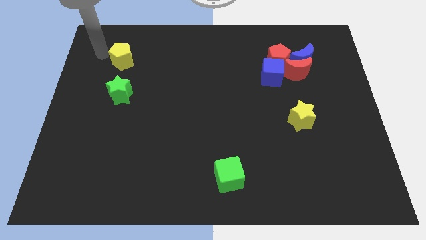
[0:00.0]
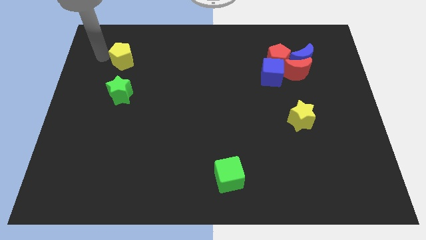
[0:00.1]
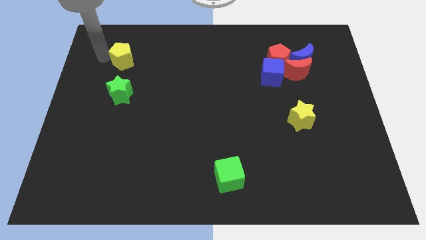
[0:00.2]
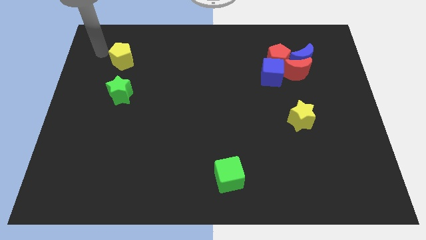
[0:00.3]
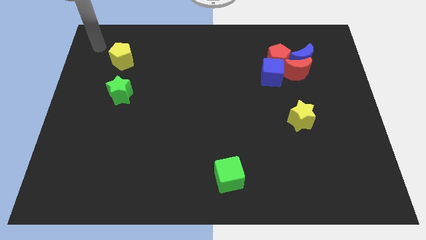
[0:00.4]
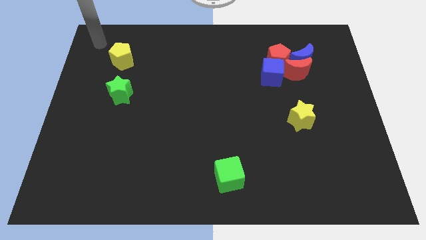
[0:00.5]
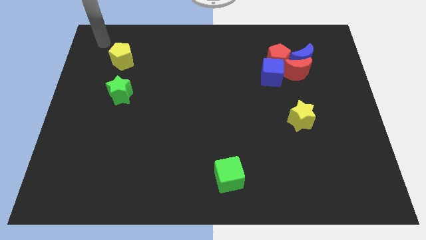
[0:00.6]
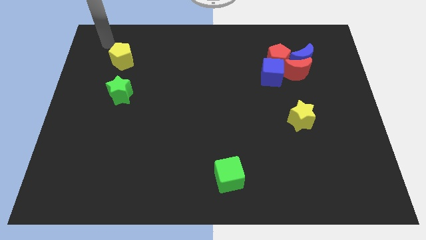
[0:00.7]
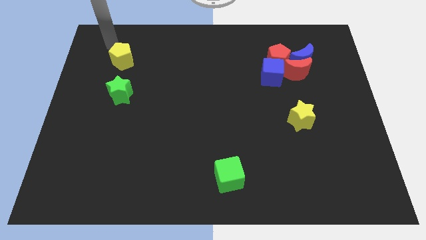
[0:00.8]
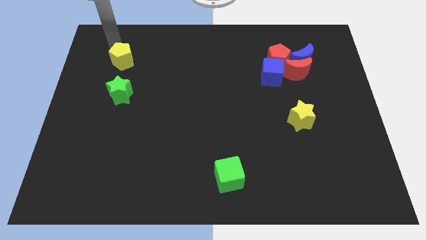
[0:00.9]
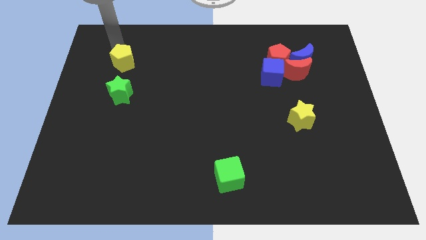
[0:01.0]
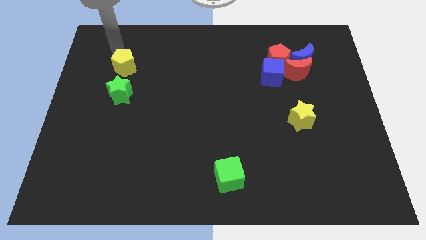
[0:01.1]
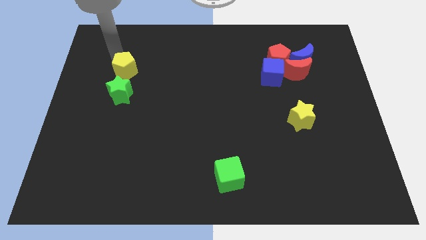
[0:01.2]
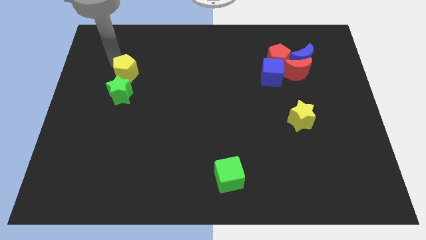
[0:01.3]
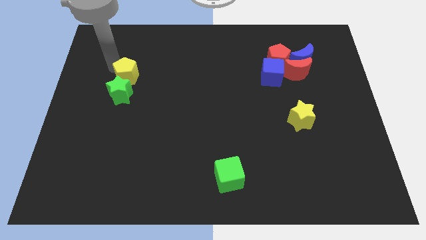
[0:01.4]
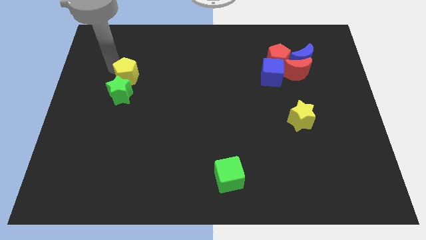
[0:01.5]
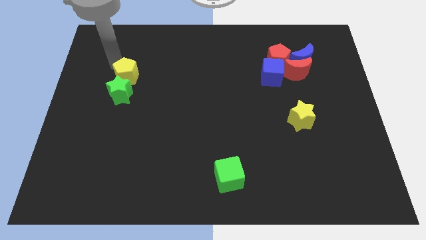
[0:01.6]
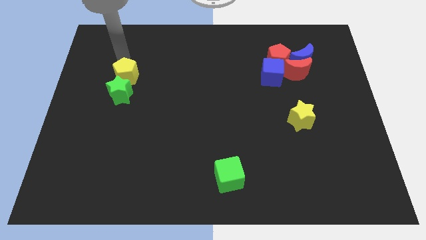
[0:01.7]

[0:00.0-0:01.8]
place the yellow pentagon above the green star

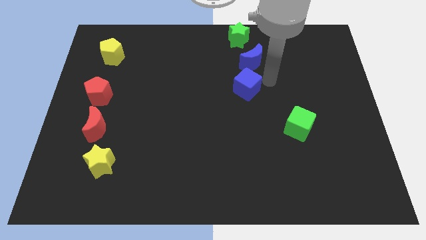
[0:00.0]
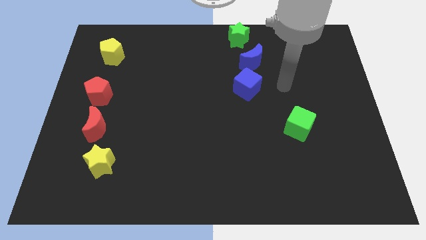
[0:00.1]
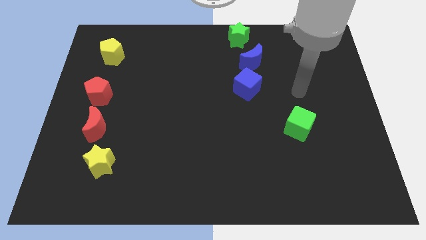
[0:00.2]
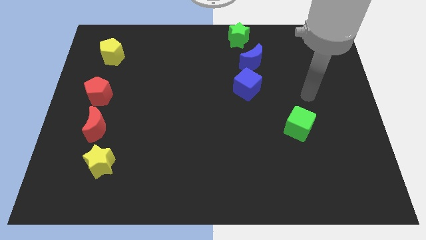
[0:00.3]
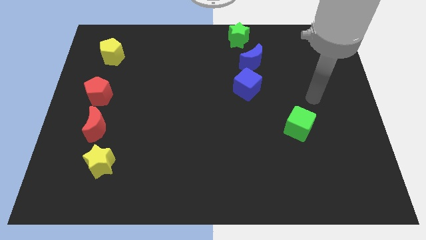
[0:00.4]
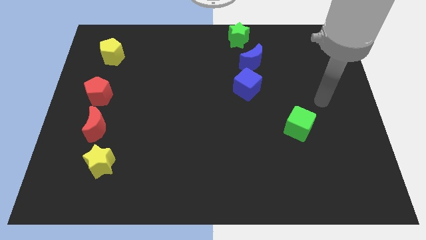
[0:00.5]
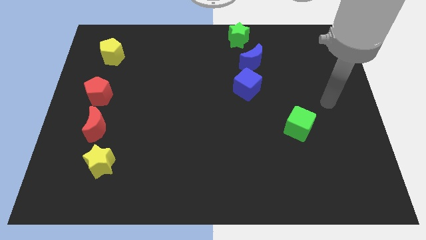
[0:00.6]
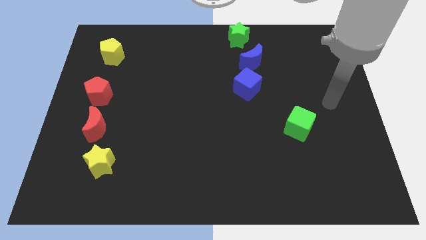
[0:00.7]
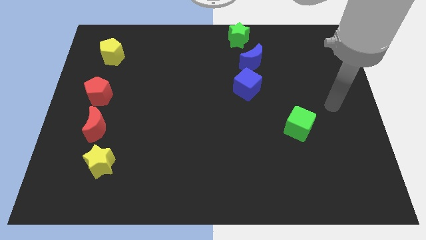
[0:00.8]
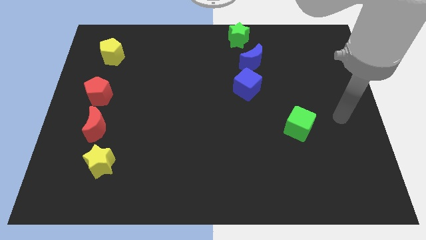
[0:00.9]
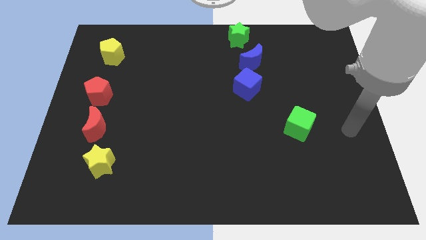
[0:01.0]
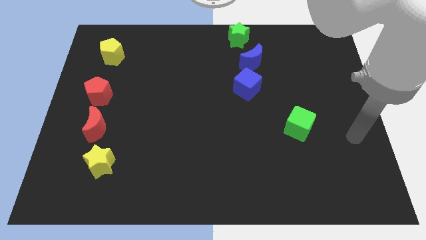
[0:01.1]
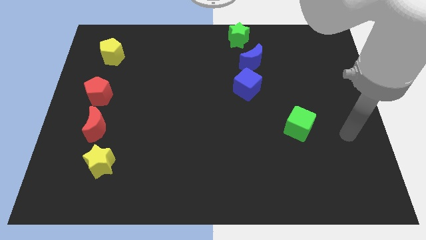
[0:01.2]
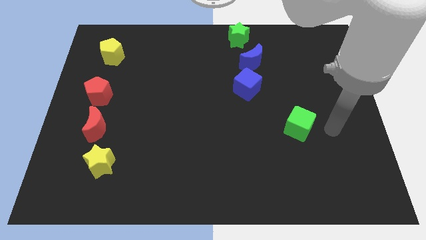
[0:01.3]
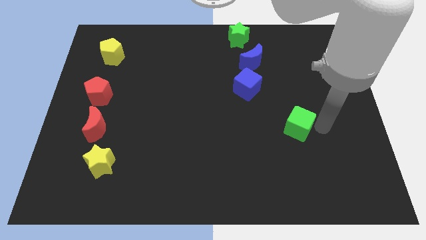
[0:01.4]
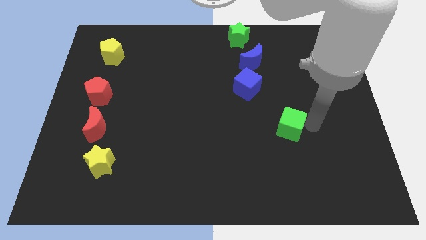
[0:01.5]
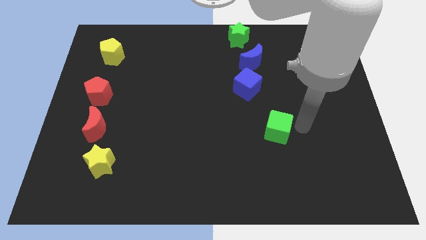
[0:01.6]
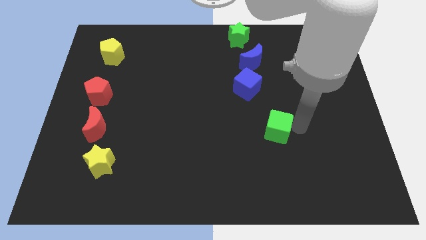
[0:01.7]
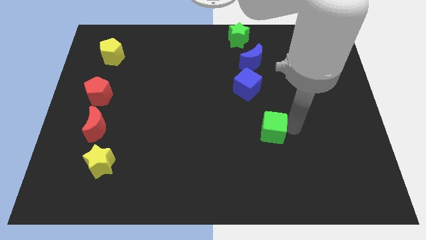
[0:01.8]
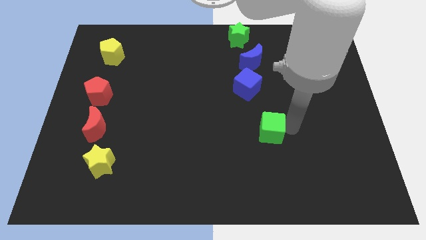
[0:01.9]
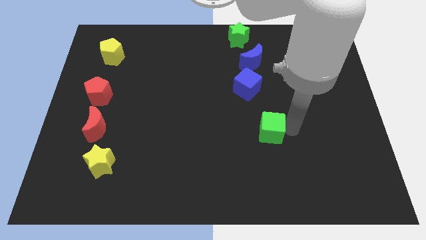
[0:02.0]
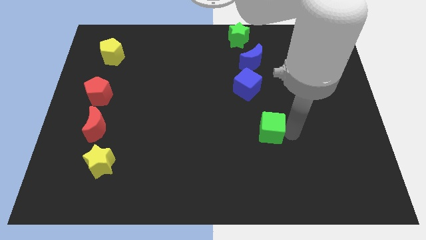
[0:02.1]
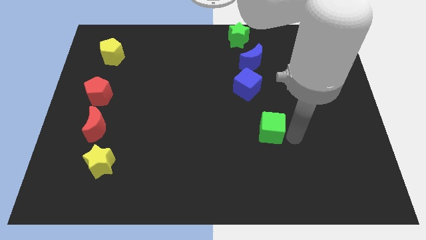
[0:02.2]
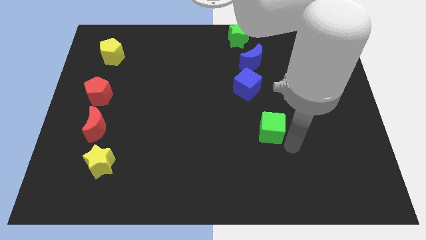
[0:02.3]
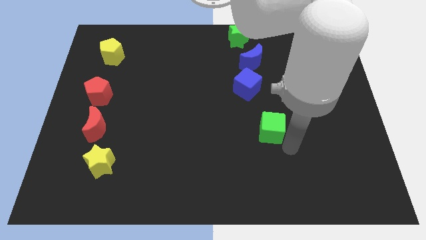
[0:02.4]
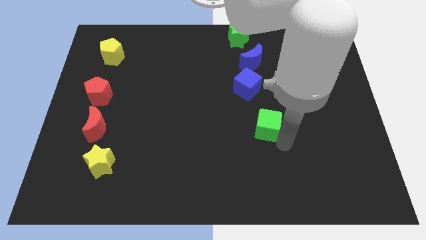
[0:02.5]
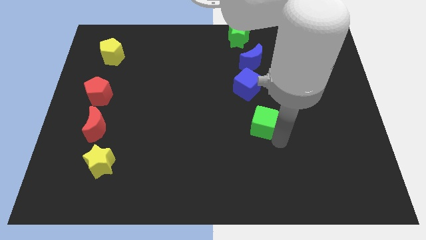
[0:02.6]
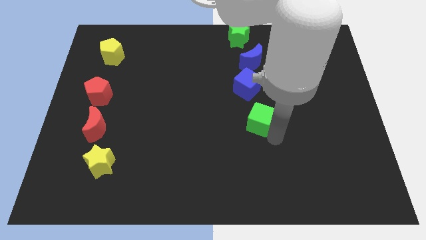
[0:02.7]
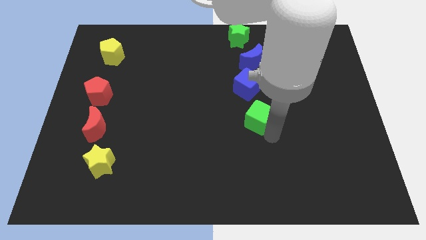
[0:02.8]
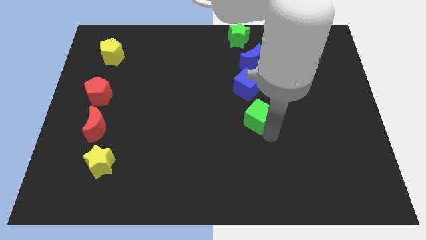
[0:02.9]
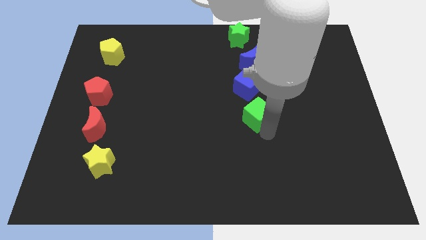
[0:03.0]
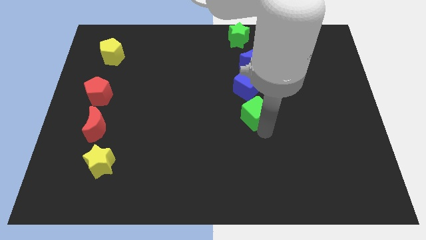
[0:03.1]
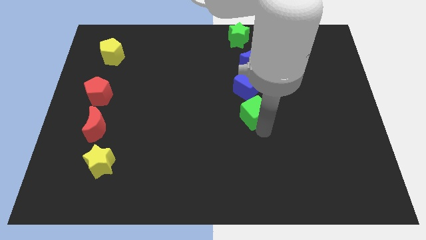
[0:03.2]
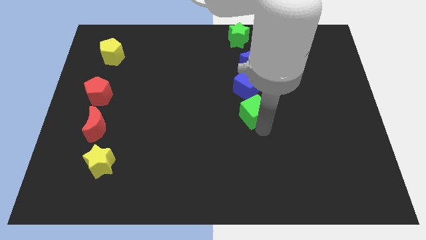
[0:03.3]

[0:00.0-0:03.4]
place the green cube under the blue cube

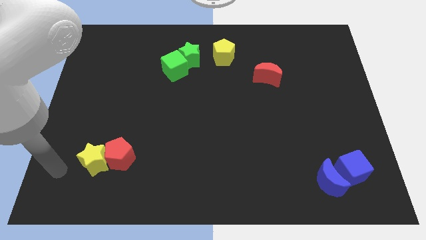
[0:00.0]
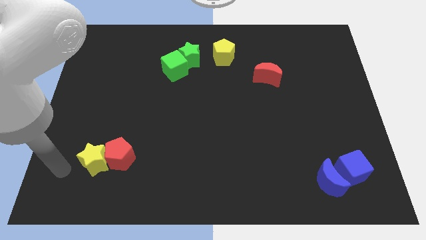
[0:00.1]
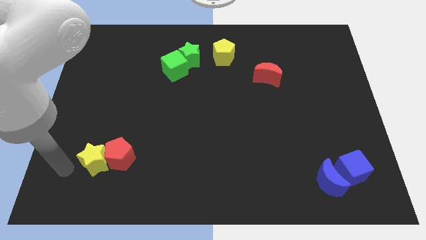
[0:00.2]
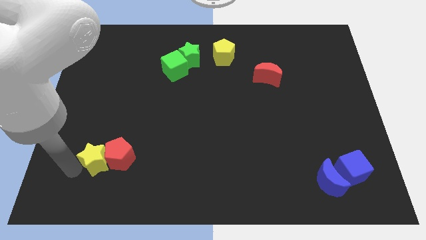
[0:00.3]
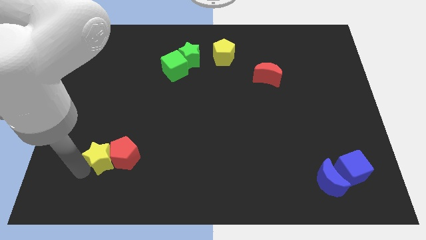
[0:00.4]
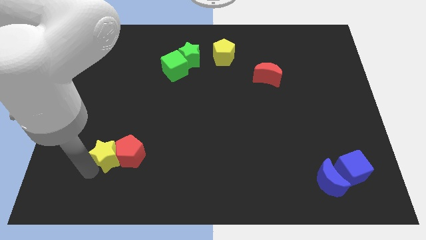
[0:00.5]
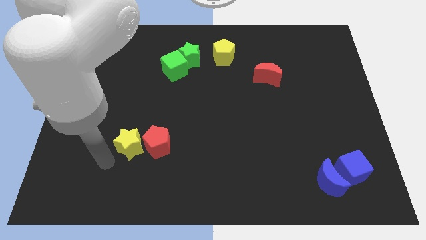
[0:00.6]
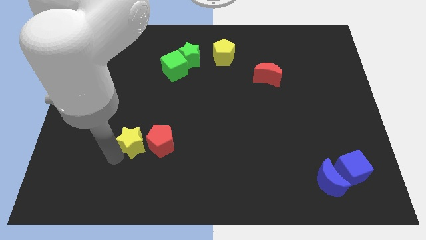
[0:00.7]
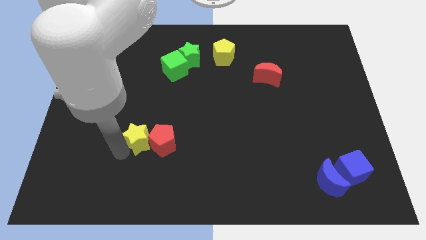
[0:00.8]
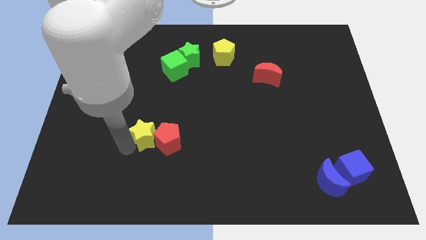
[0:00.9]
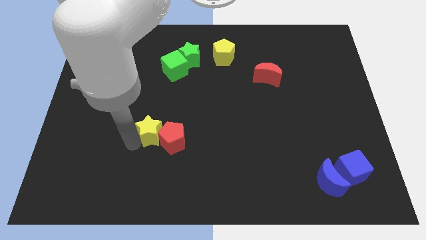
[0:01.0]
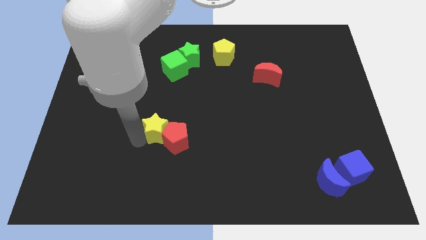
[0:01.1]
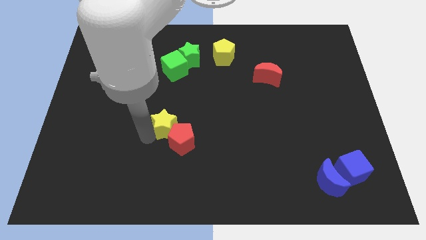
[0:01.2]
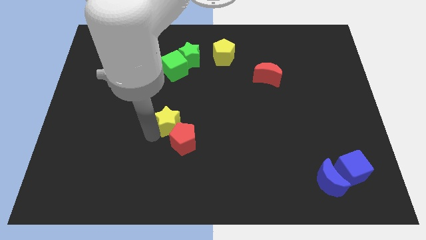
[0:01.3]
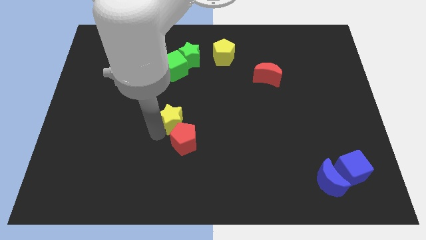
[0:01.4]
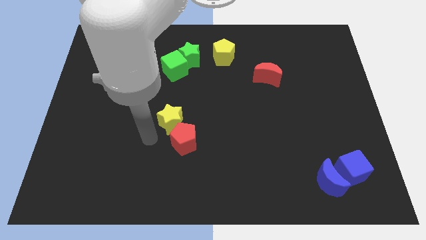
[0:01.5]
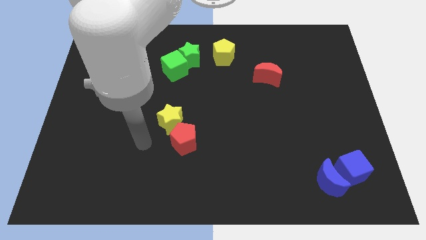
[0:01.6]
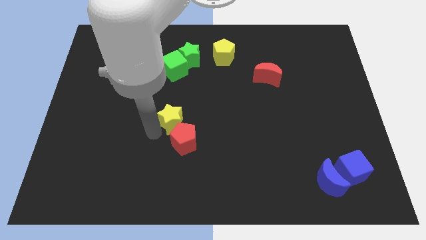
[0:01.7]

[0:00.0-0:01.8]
push the yellow star and red pentagon below green blocks

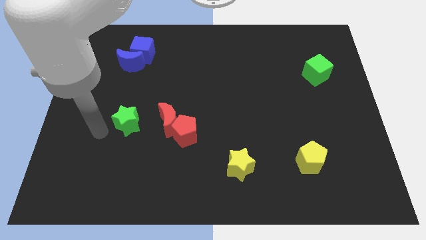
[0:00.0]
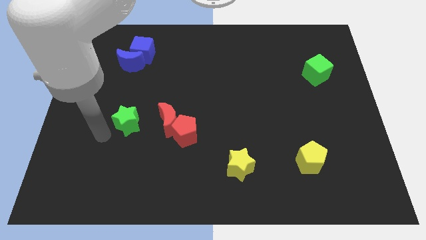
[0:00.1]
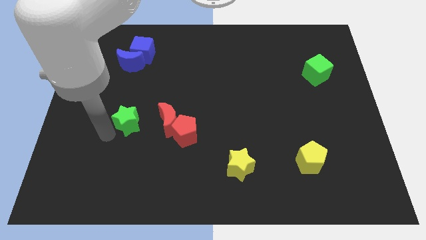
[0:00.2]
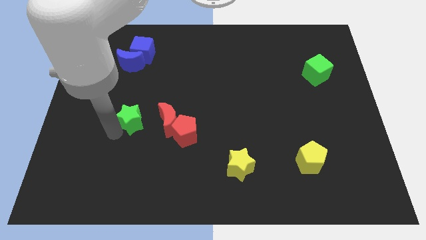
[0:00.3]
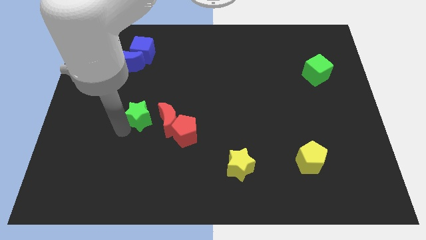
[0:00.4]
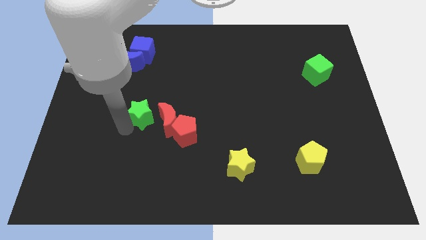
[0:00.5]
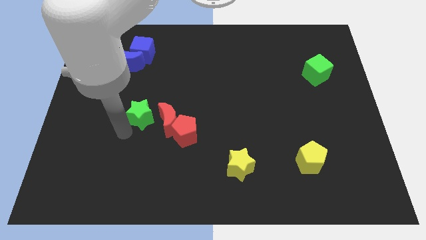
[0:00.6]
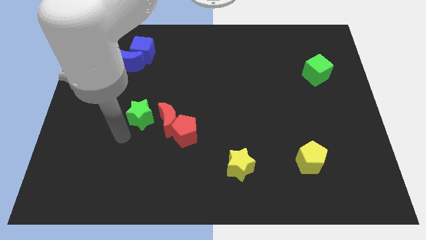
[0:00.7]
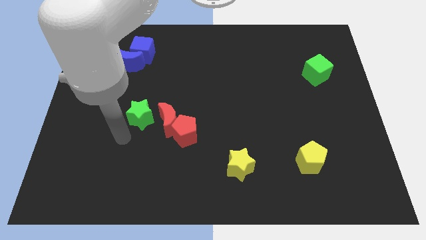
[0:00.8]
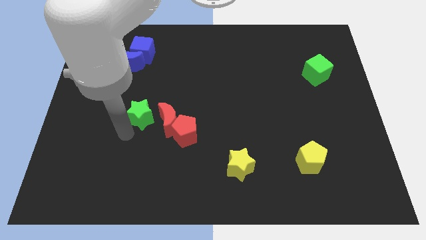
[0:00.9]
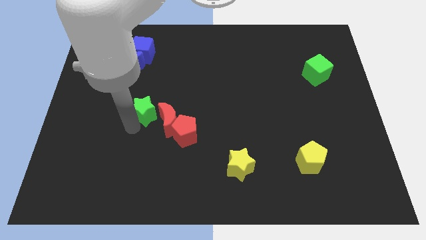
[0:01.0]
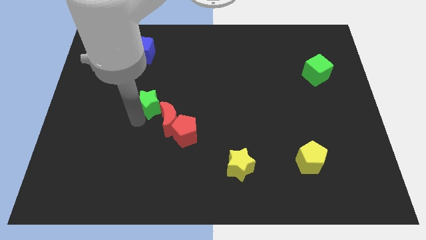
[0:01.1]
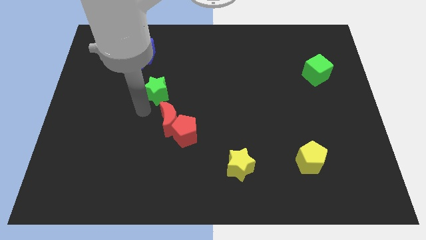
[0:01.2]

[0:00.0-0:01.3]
place the green star to the top left of the red crescent

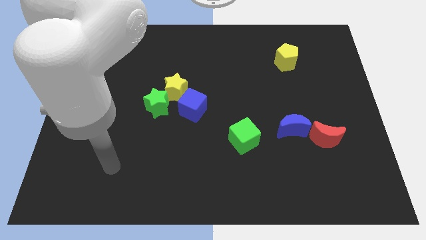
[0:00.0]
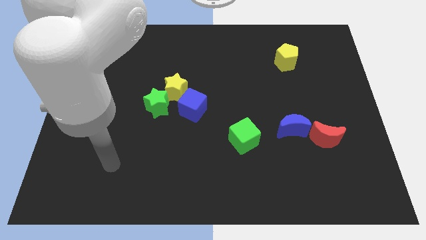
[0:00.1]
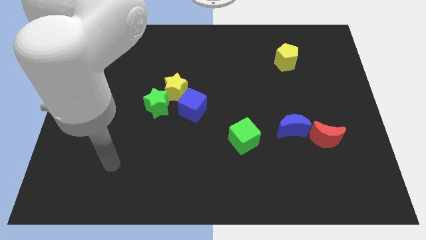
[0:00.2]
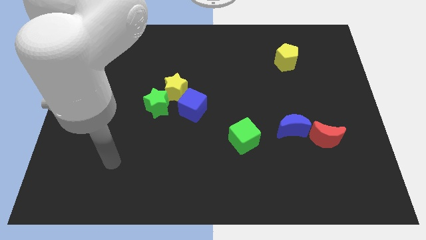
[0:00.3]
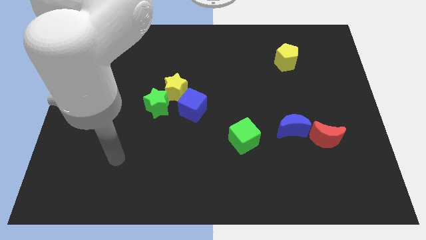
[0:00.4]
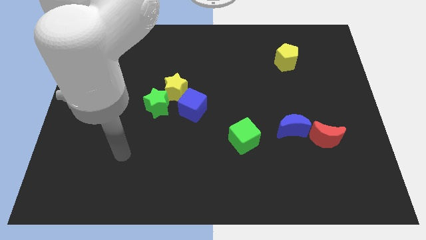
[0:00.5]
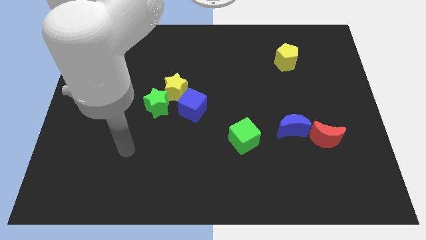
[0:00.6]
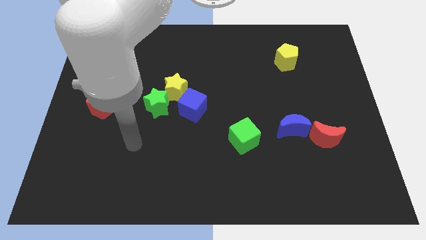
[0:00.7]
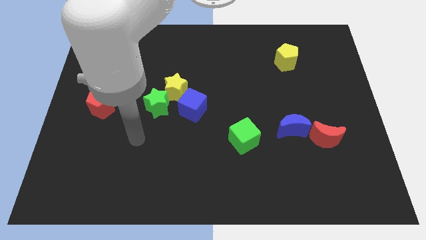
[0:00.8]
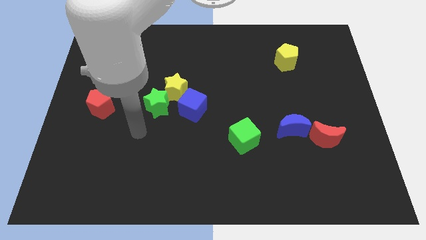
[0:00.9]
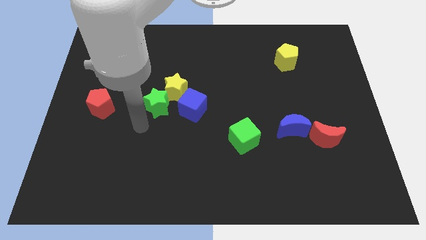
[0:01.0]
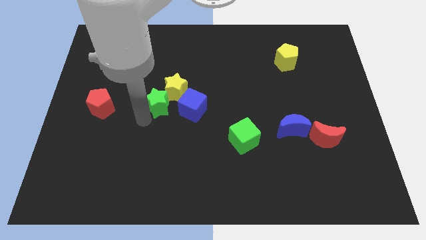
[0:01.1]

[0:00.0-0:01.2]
move your arm to the bottom of the green star
